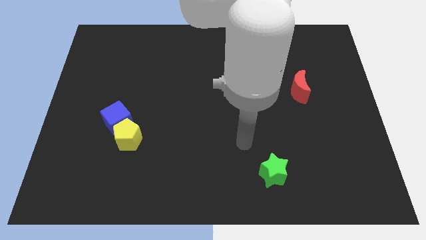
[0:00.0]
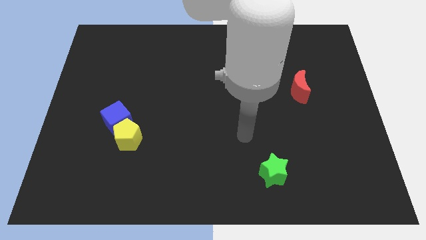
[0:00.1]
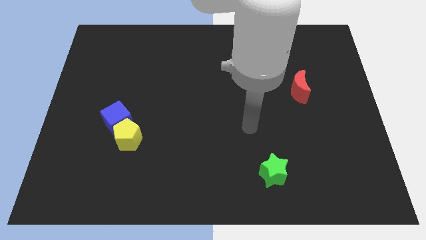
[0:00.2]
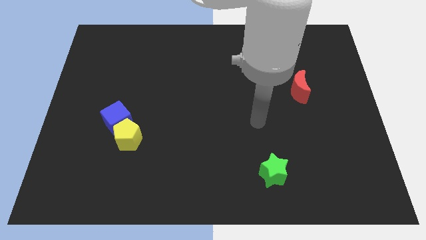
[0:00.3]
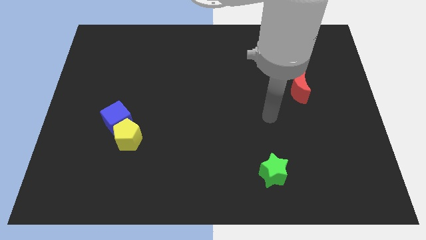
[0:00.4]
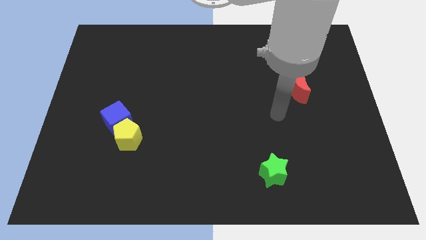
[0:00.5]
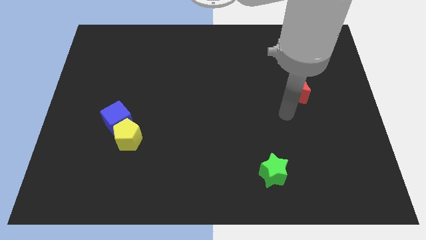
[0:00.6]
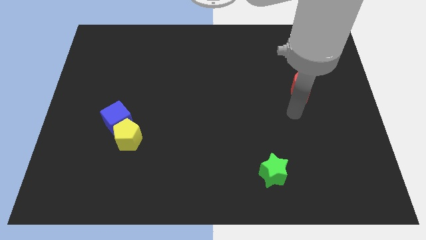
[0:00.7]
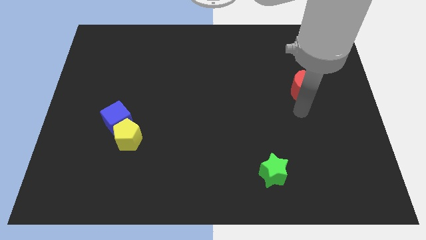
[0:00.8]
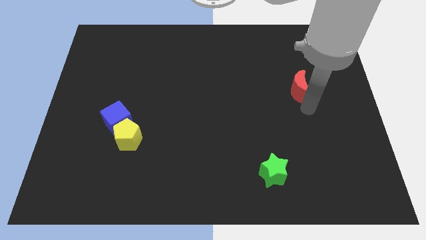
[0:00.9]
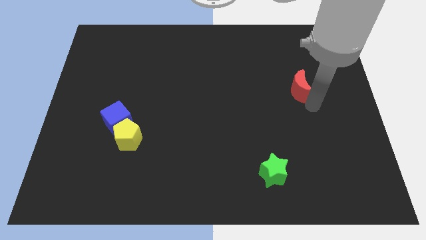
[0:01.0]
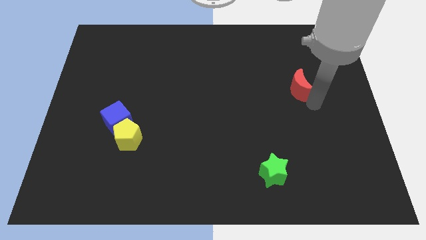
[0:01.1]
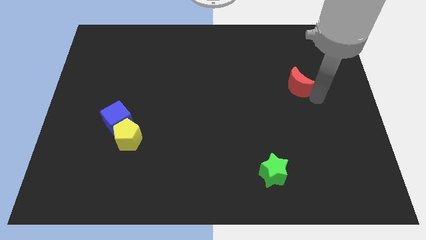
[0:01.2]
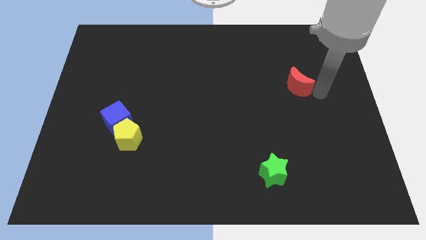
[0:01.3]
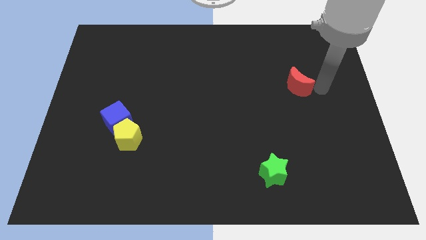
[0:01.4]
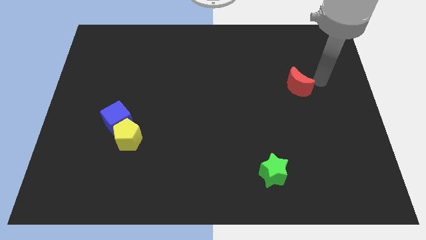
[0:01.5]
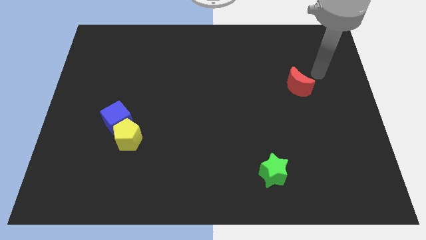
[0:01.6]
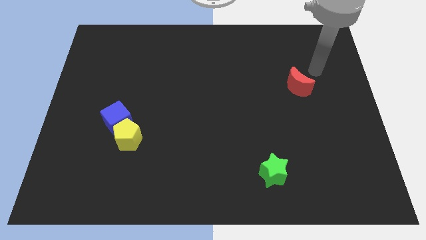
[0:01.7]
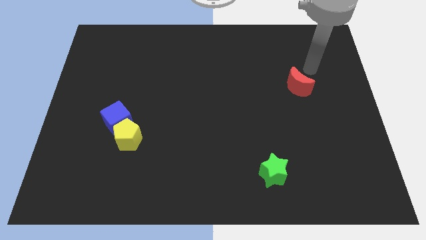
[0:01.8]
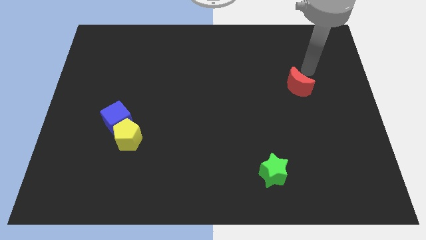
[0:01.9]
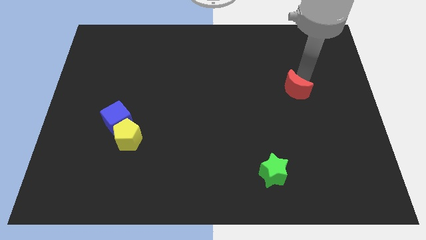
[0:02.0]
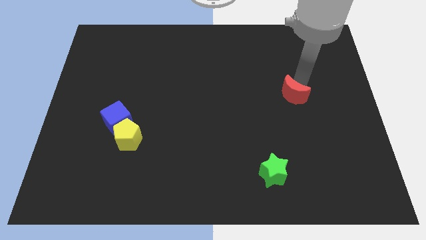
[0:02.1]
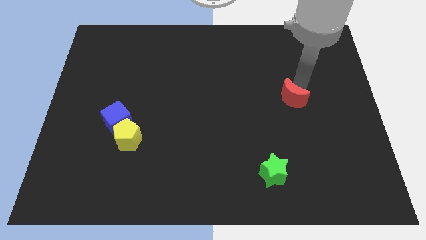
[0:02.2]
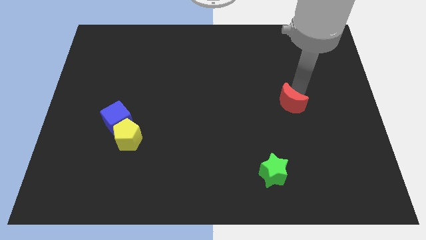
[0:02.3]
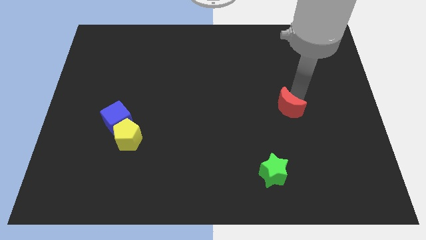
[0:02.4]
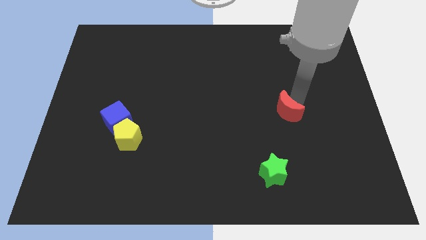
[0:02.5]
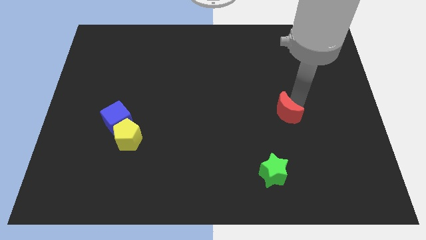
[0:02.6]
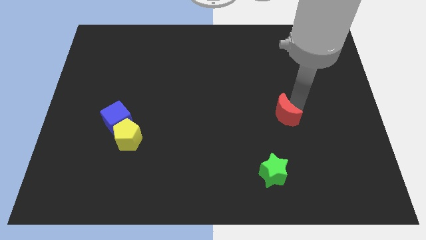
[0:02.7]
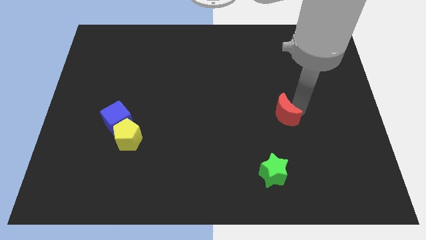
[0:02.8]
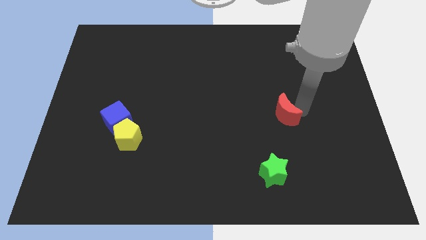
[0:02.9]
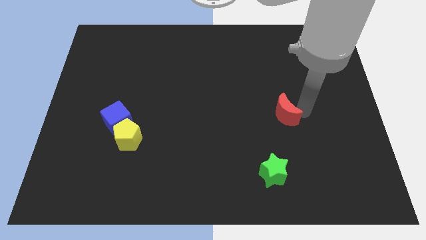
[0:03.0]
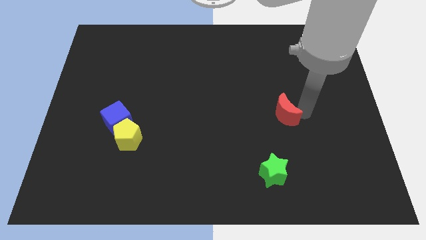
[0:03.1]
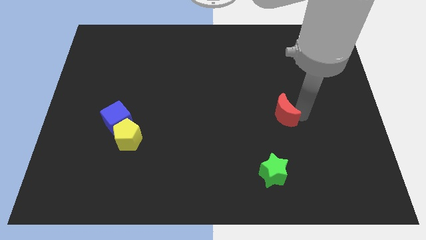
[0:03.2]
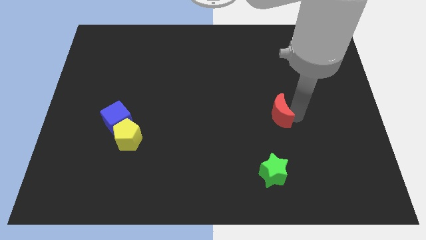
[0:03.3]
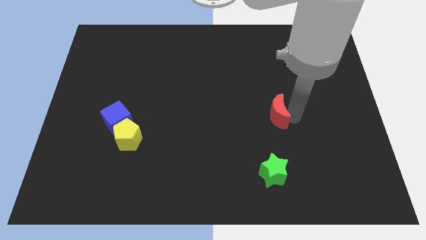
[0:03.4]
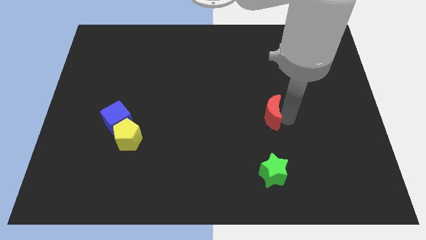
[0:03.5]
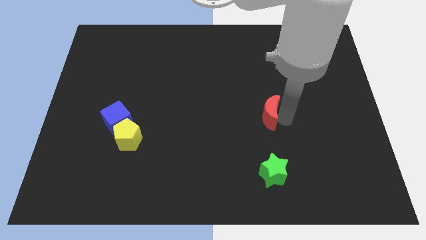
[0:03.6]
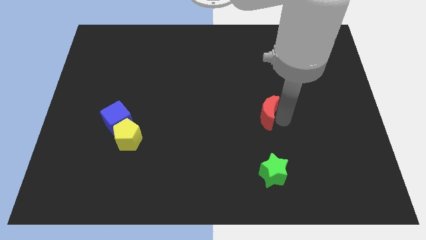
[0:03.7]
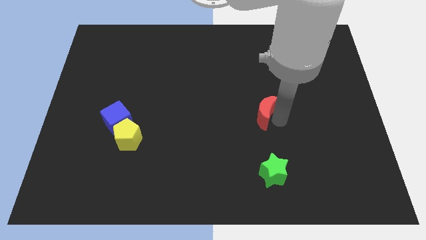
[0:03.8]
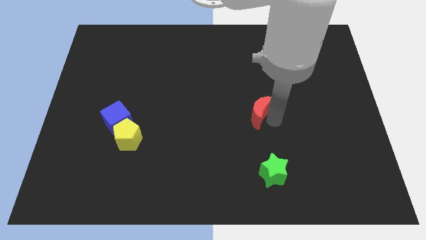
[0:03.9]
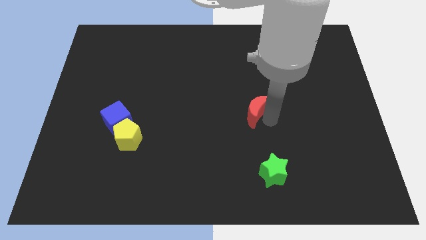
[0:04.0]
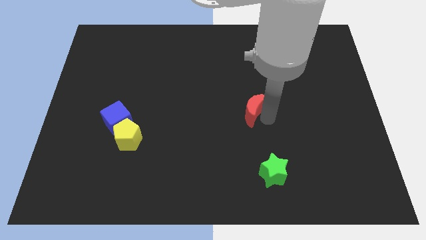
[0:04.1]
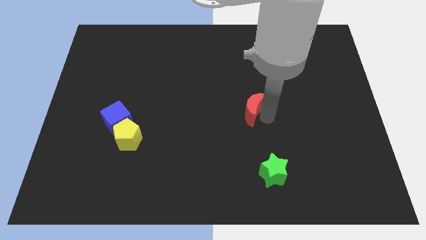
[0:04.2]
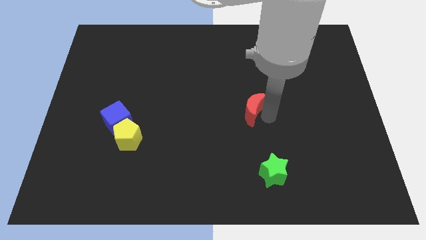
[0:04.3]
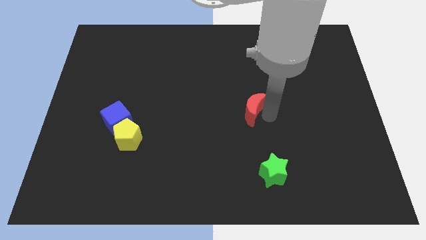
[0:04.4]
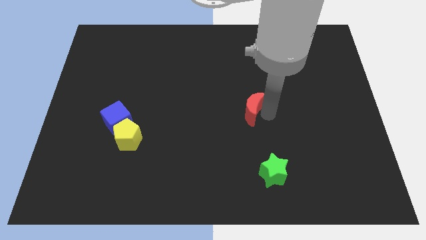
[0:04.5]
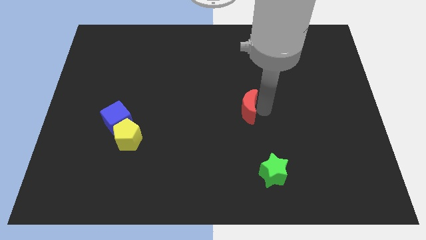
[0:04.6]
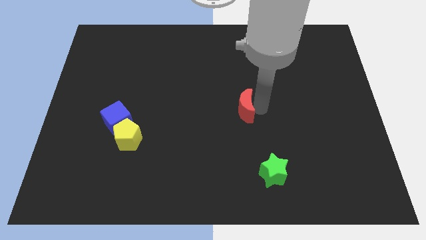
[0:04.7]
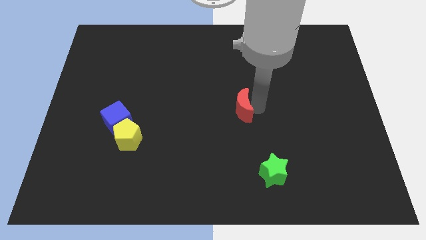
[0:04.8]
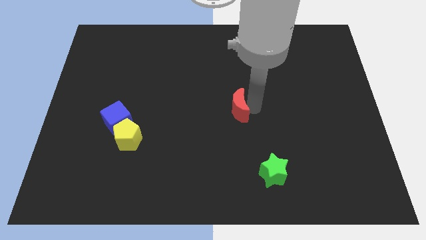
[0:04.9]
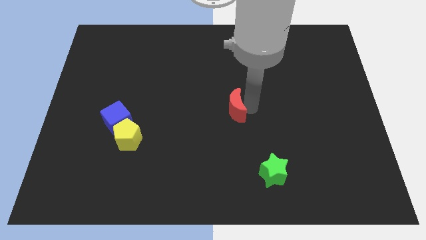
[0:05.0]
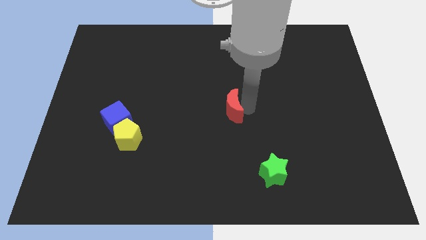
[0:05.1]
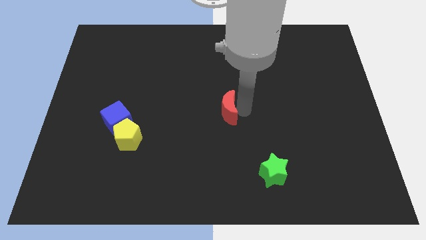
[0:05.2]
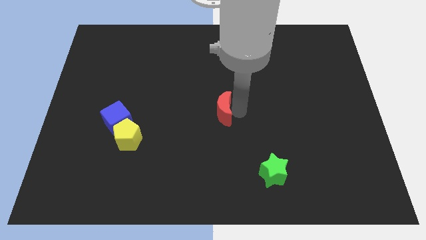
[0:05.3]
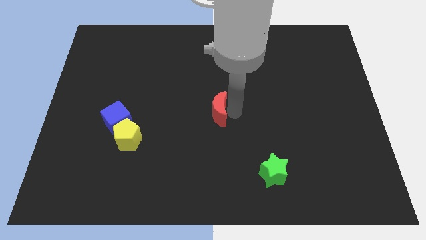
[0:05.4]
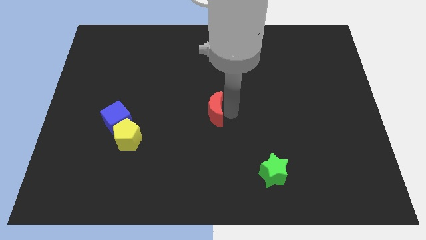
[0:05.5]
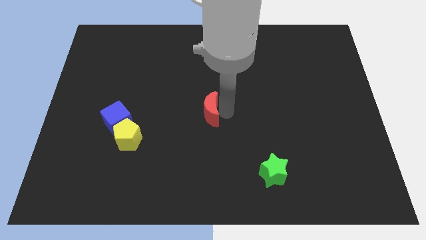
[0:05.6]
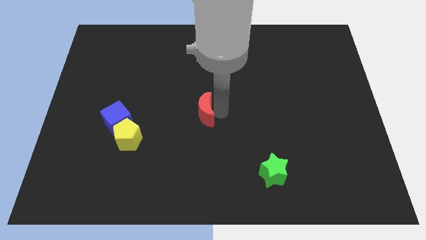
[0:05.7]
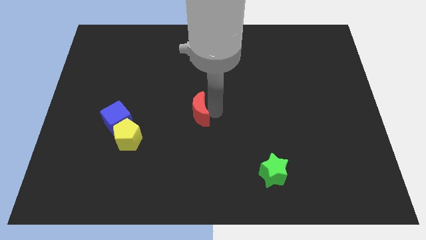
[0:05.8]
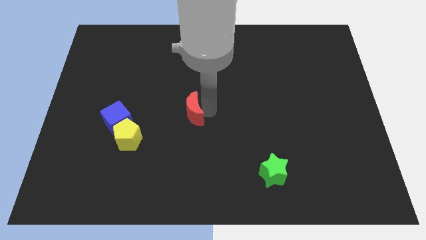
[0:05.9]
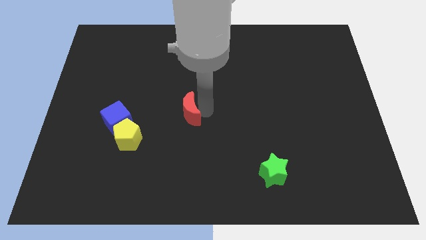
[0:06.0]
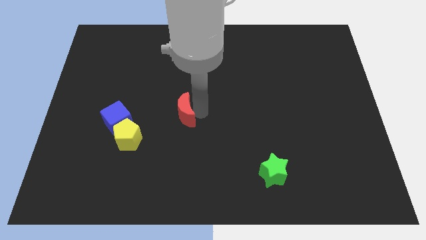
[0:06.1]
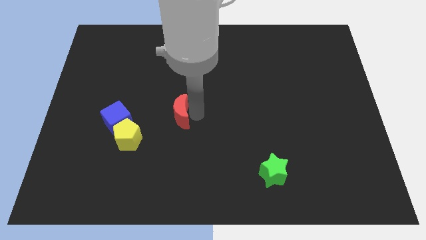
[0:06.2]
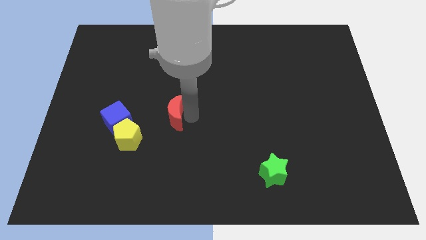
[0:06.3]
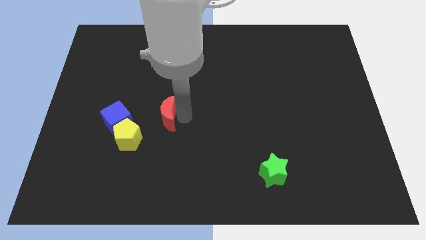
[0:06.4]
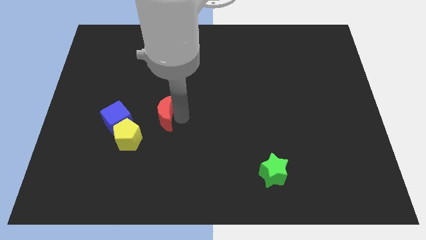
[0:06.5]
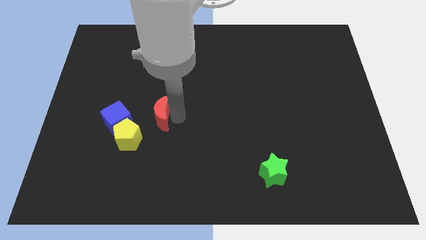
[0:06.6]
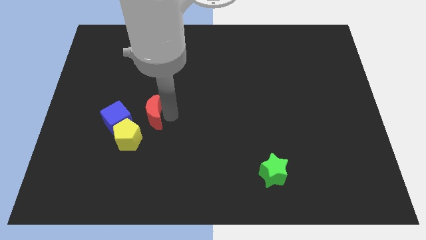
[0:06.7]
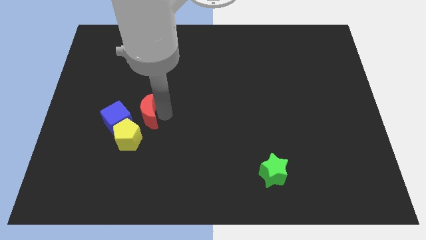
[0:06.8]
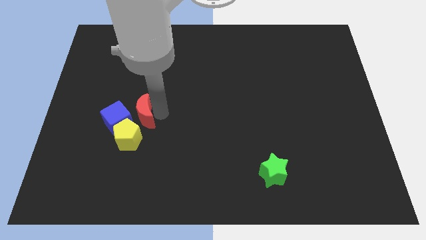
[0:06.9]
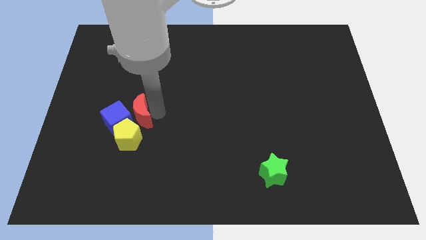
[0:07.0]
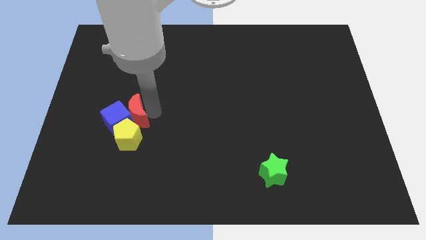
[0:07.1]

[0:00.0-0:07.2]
push the moon next to the blue cube

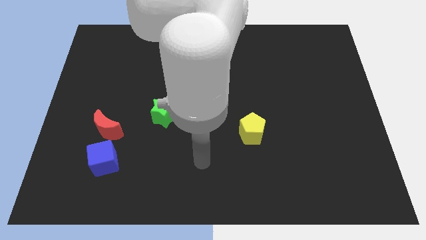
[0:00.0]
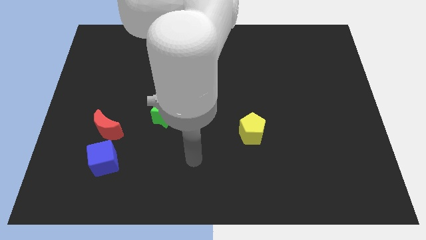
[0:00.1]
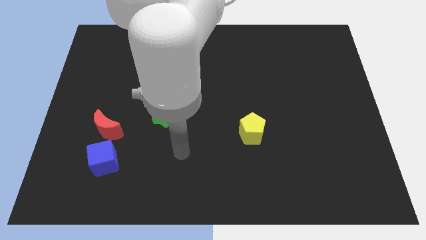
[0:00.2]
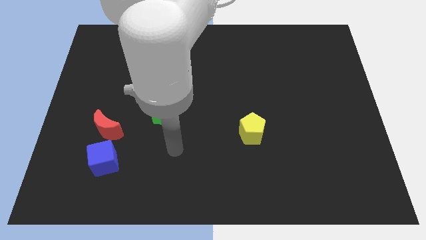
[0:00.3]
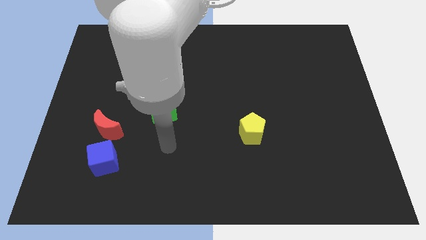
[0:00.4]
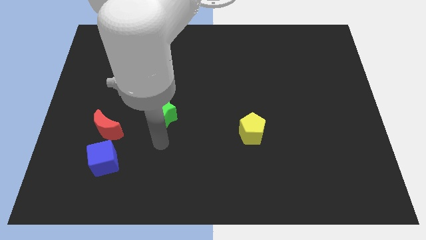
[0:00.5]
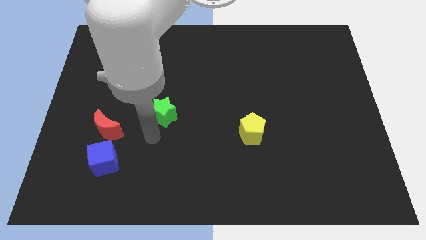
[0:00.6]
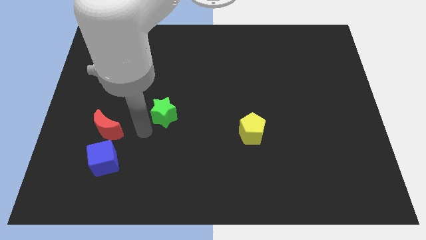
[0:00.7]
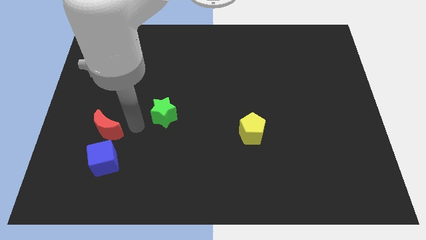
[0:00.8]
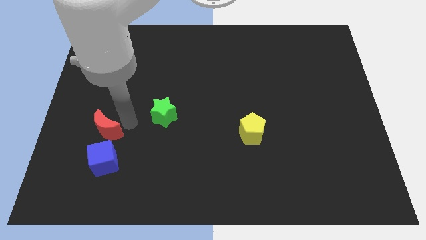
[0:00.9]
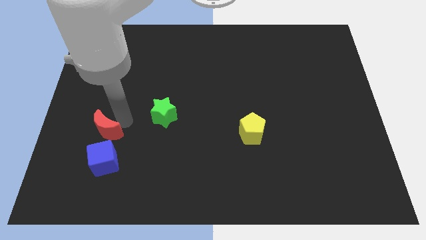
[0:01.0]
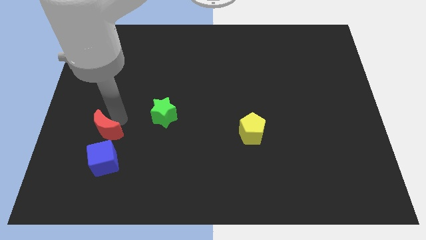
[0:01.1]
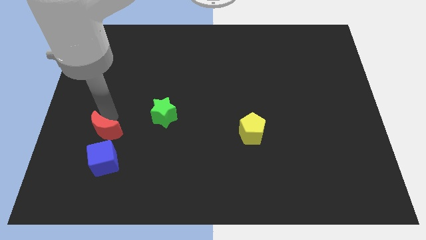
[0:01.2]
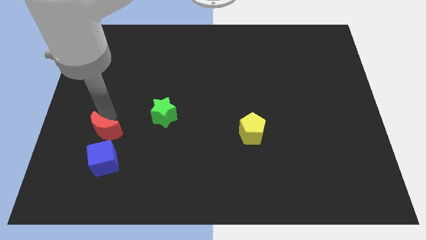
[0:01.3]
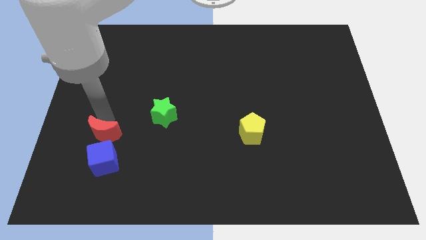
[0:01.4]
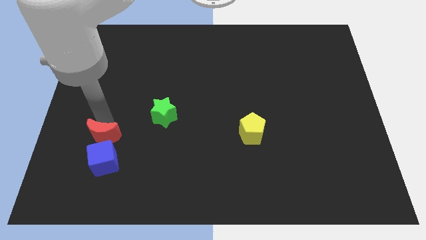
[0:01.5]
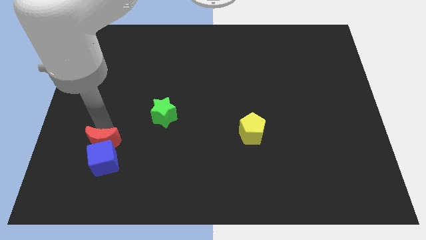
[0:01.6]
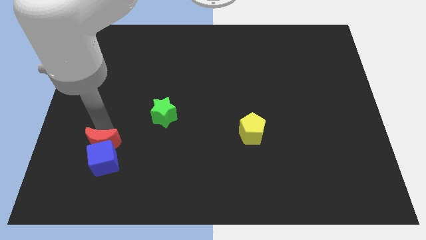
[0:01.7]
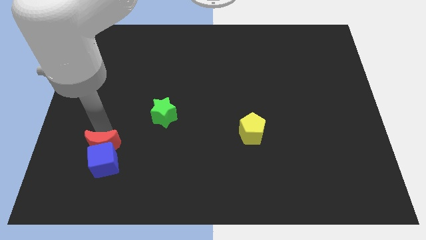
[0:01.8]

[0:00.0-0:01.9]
push the red moon close to the blue cube
